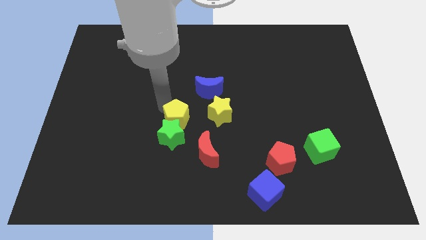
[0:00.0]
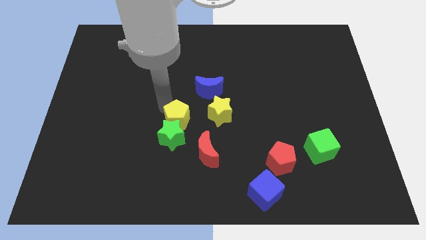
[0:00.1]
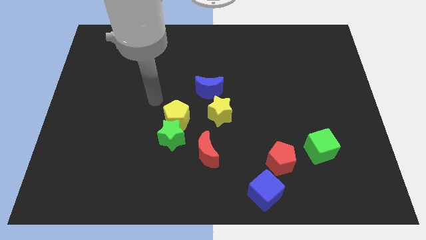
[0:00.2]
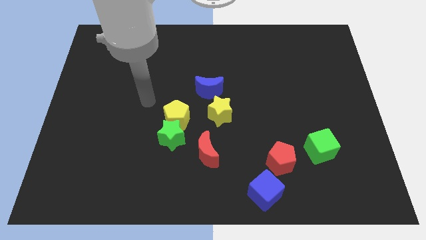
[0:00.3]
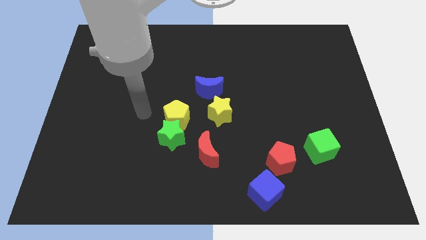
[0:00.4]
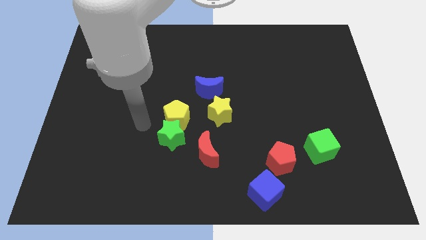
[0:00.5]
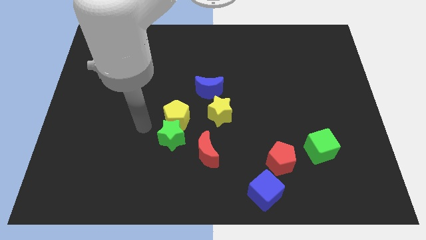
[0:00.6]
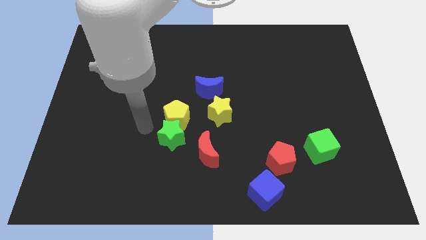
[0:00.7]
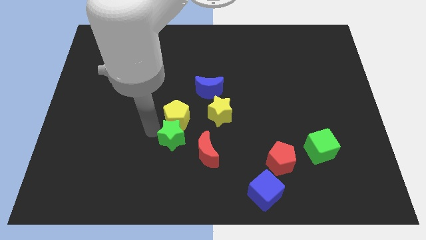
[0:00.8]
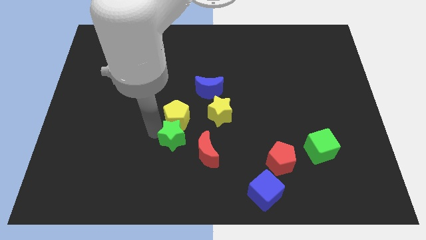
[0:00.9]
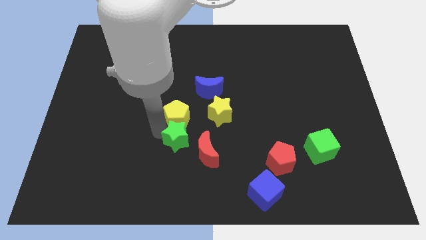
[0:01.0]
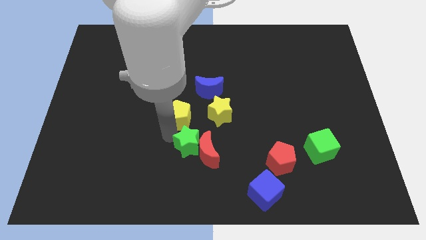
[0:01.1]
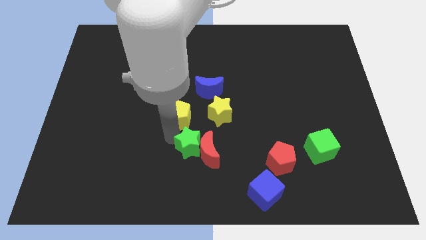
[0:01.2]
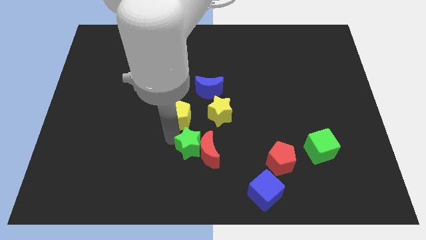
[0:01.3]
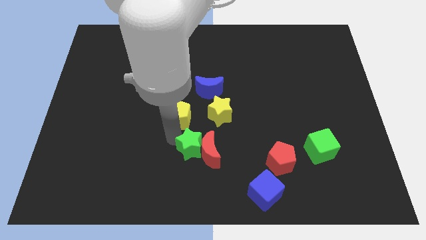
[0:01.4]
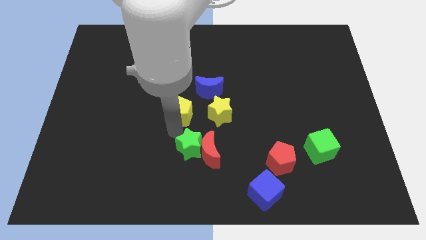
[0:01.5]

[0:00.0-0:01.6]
push green star into red moon

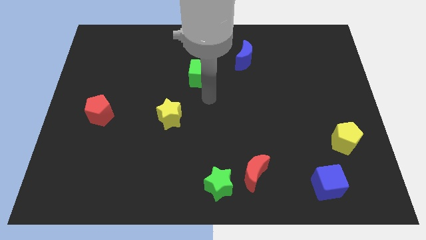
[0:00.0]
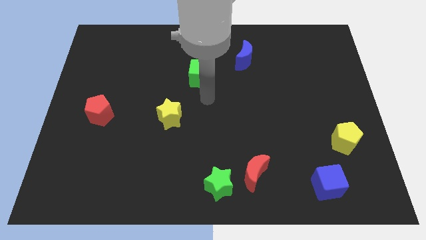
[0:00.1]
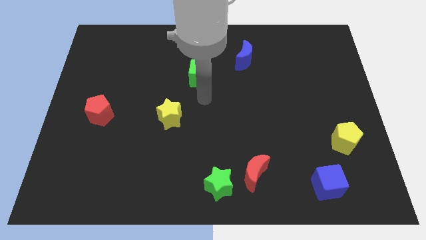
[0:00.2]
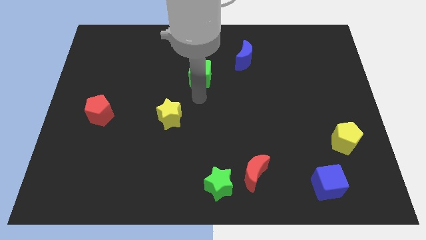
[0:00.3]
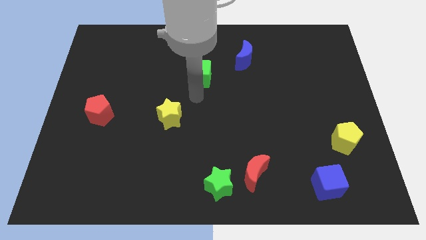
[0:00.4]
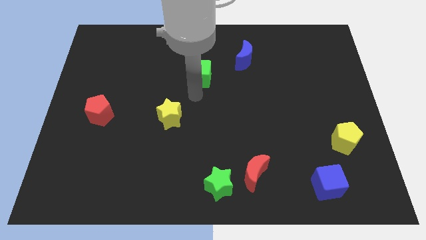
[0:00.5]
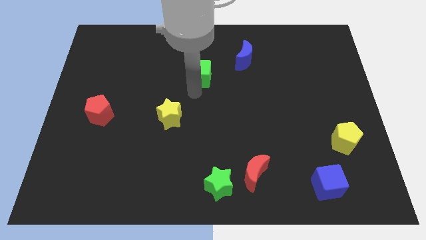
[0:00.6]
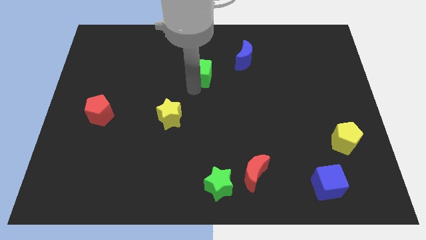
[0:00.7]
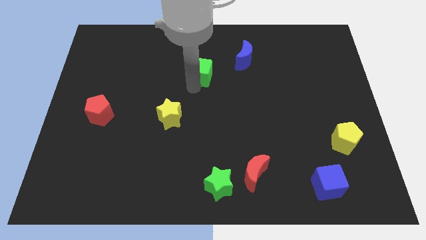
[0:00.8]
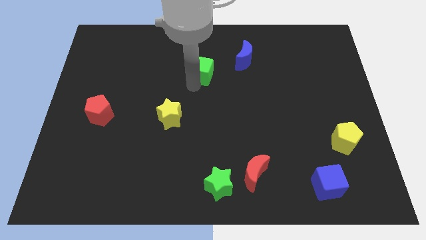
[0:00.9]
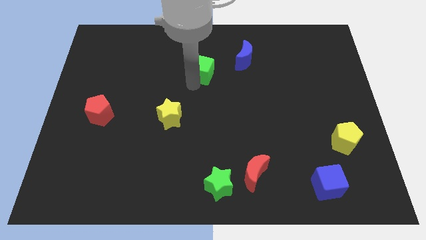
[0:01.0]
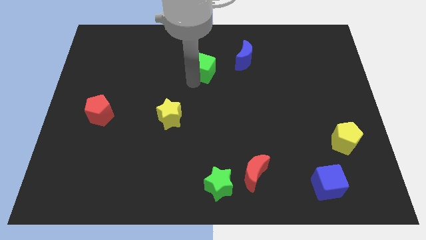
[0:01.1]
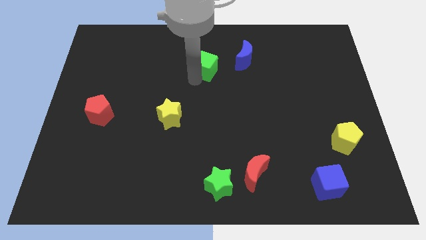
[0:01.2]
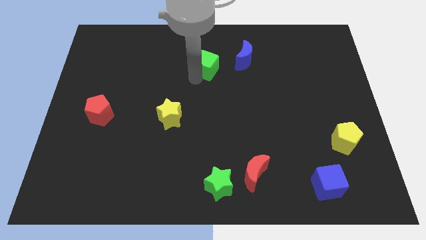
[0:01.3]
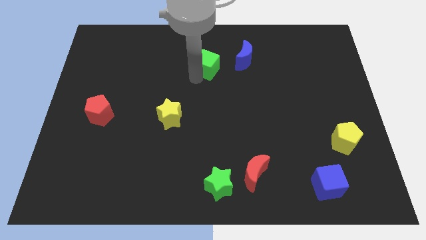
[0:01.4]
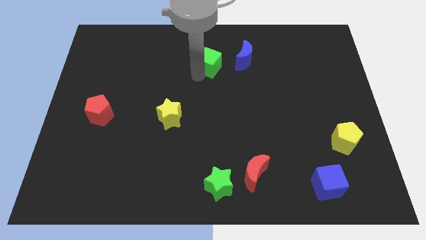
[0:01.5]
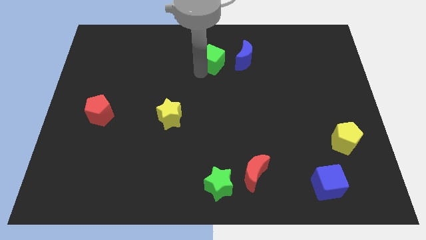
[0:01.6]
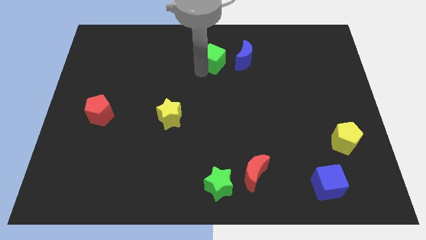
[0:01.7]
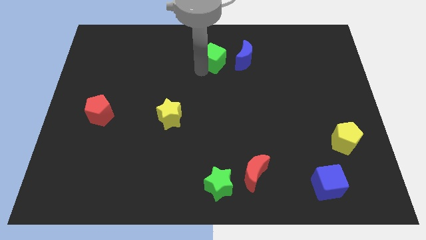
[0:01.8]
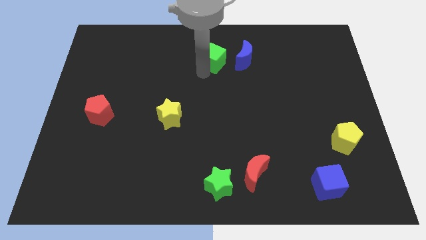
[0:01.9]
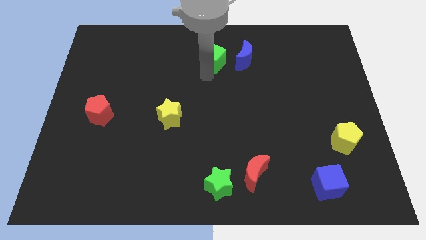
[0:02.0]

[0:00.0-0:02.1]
push the green cube left to the blue moon

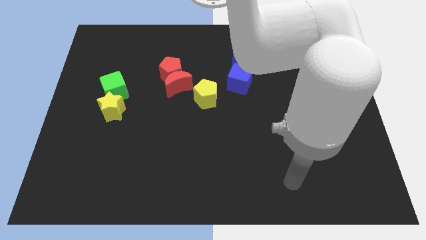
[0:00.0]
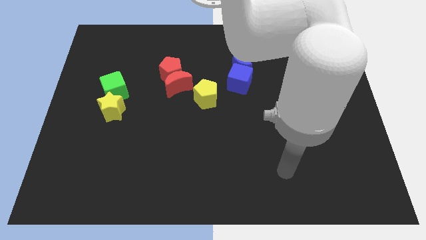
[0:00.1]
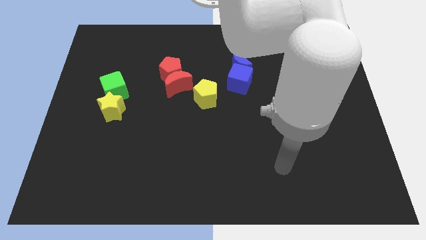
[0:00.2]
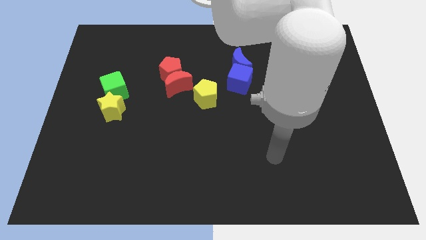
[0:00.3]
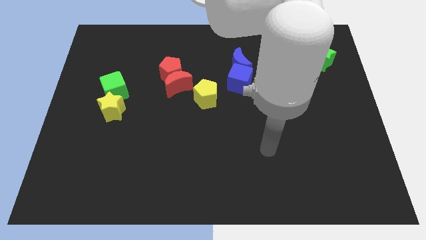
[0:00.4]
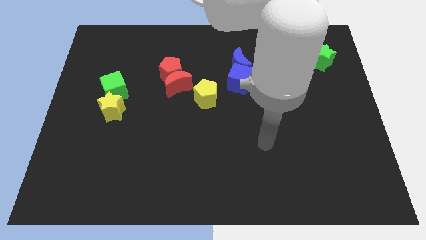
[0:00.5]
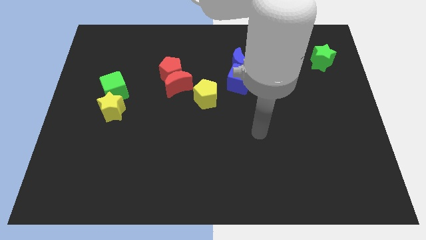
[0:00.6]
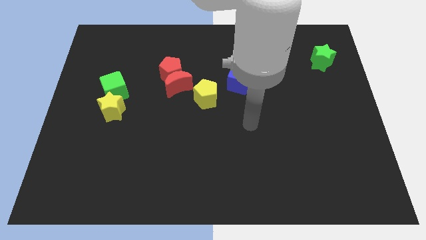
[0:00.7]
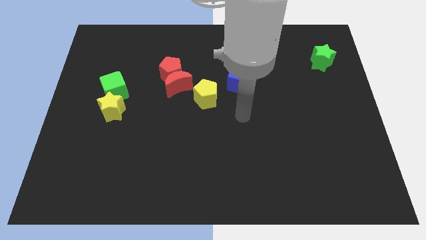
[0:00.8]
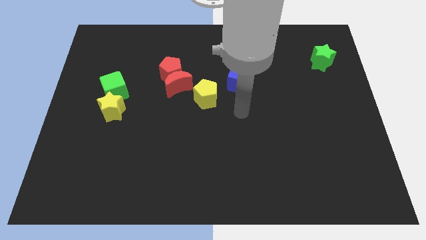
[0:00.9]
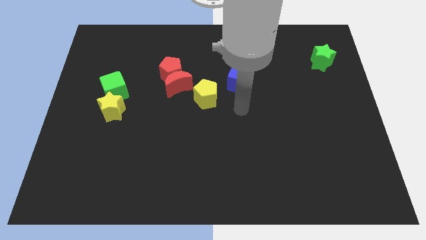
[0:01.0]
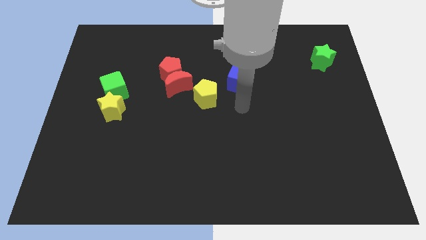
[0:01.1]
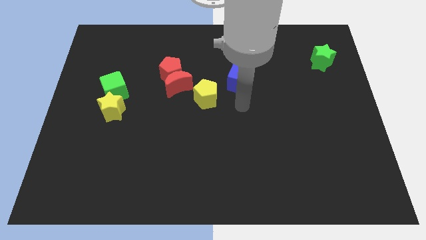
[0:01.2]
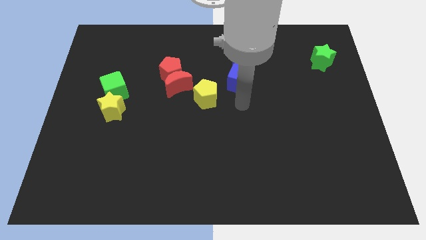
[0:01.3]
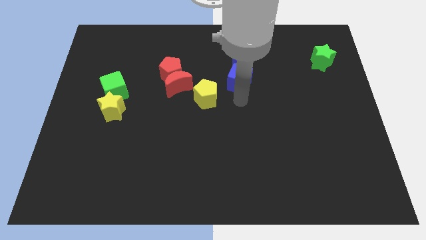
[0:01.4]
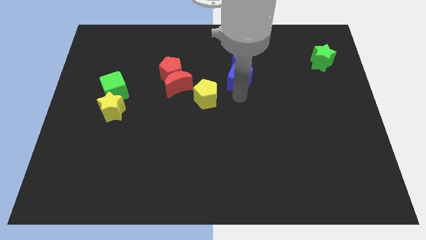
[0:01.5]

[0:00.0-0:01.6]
move your arm close to the blue cube

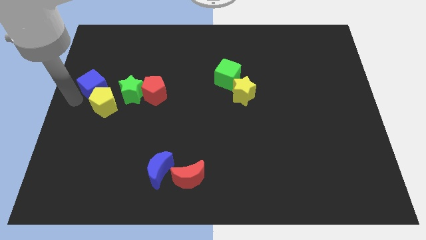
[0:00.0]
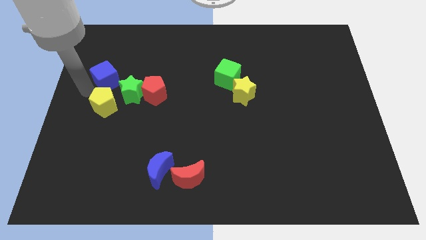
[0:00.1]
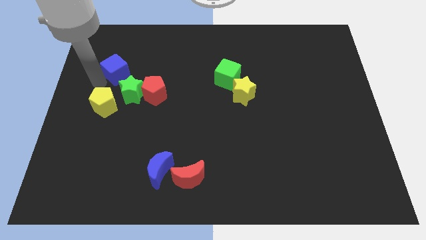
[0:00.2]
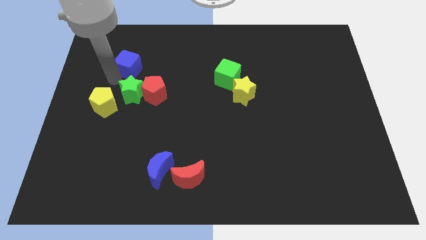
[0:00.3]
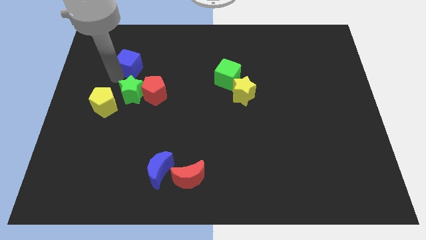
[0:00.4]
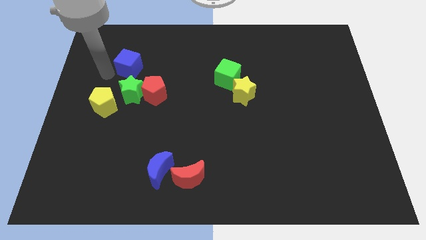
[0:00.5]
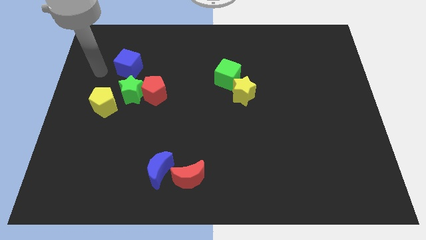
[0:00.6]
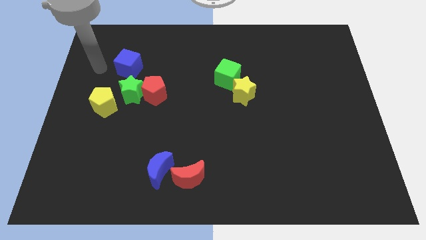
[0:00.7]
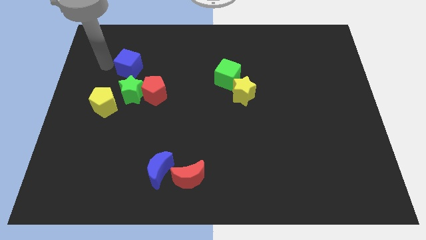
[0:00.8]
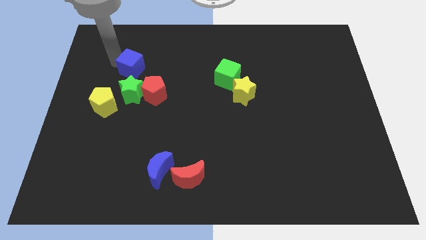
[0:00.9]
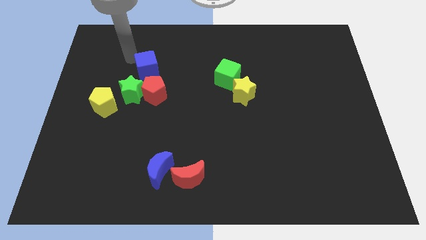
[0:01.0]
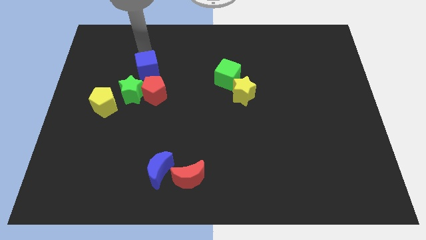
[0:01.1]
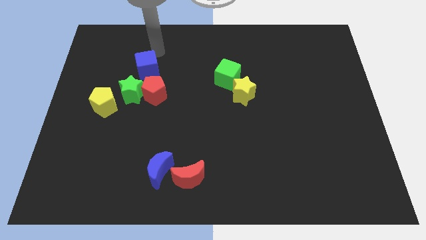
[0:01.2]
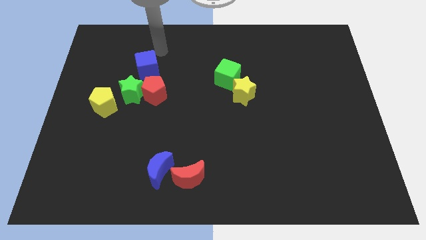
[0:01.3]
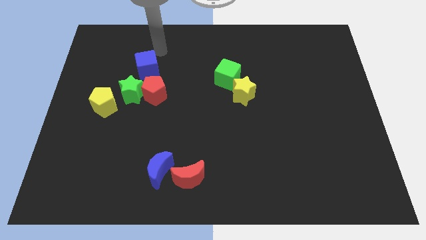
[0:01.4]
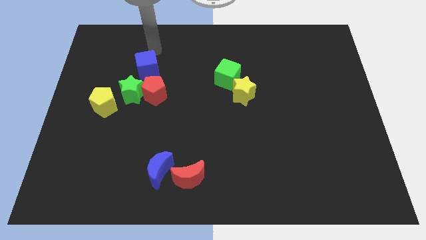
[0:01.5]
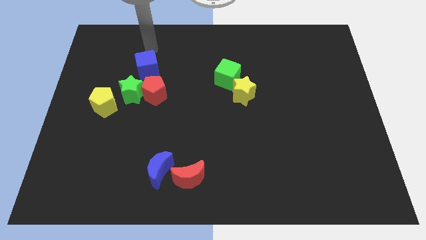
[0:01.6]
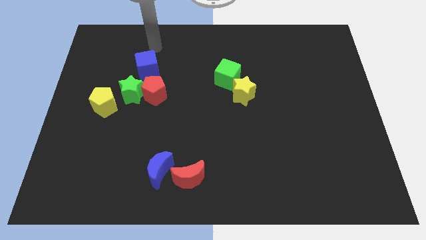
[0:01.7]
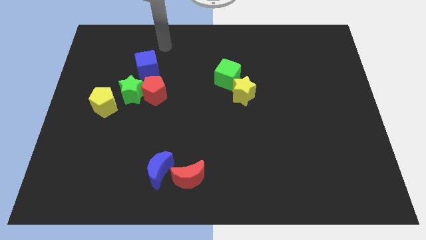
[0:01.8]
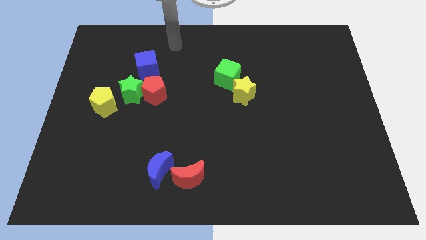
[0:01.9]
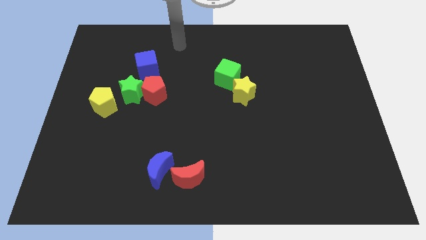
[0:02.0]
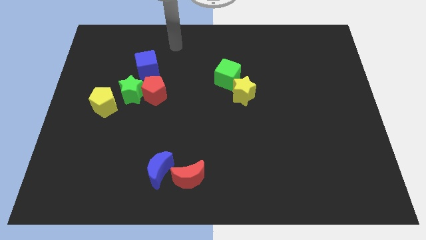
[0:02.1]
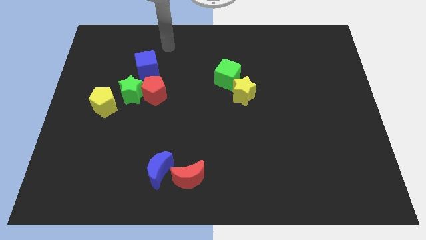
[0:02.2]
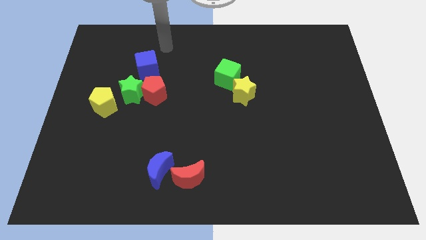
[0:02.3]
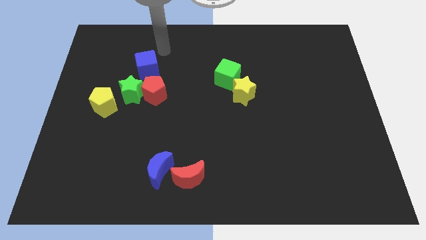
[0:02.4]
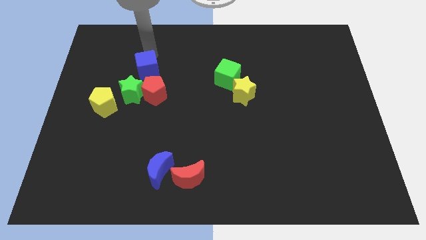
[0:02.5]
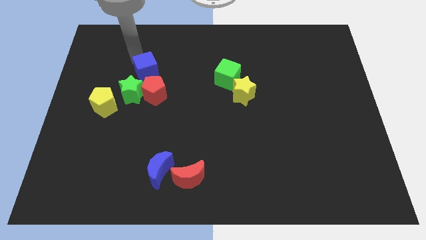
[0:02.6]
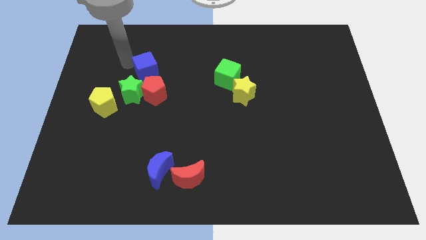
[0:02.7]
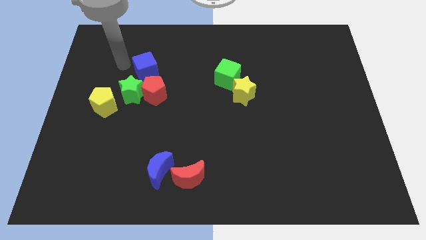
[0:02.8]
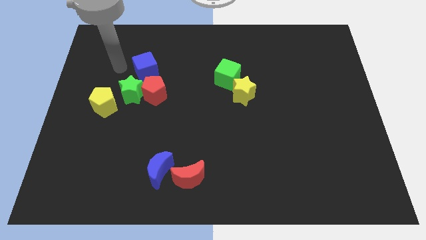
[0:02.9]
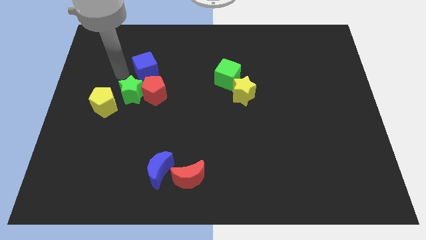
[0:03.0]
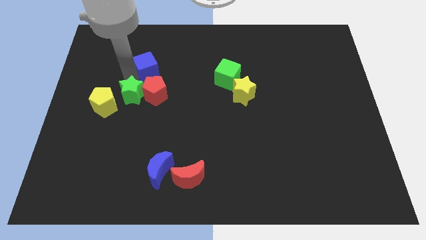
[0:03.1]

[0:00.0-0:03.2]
move the blue cube to the top of the red pentagon

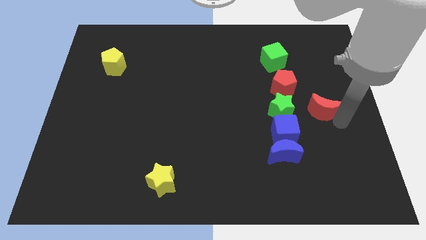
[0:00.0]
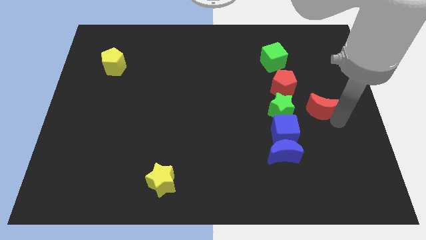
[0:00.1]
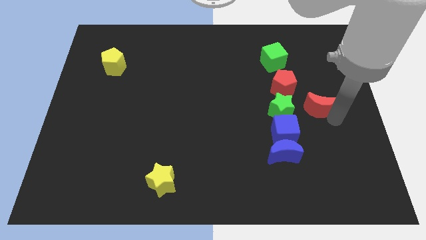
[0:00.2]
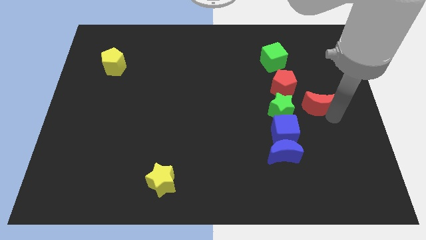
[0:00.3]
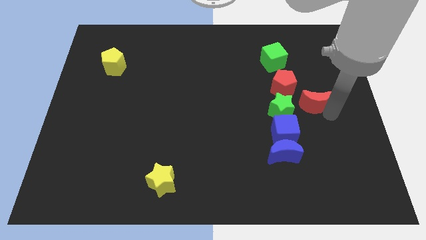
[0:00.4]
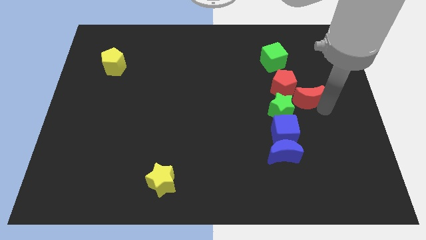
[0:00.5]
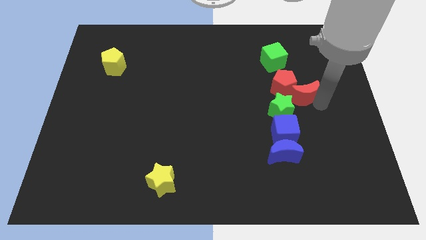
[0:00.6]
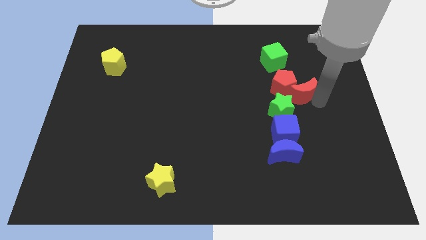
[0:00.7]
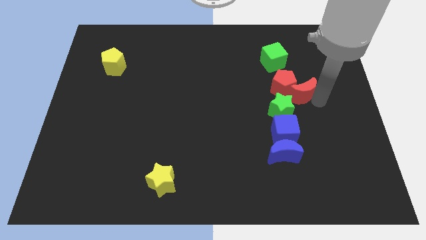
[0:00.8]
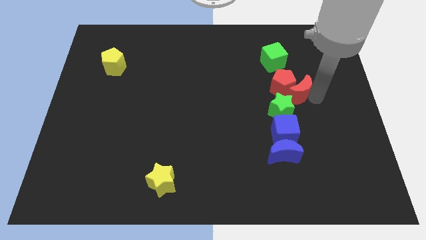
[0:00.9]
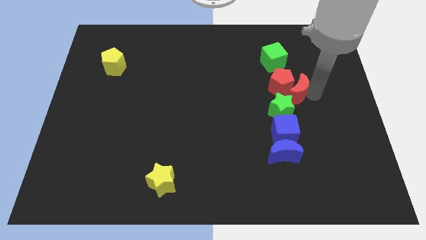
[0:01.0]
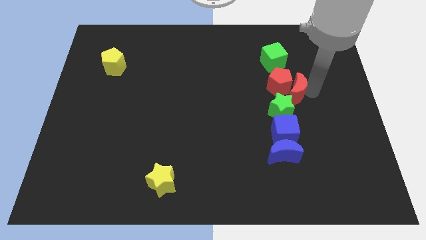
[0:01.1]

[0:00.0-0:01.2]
push the red moon into the red pentagon
